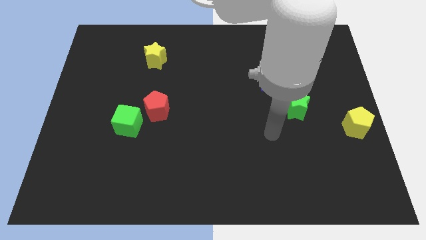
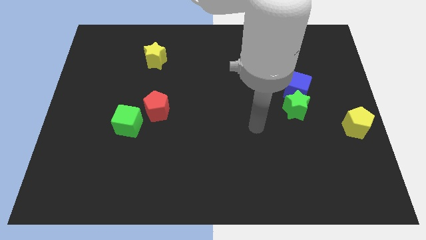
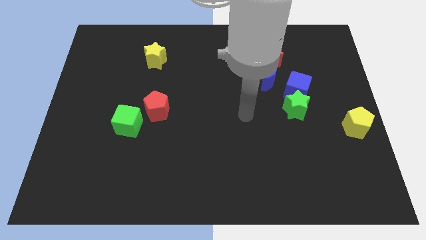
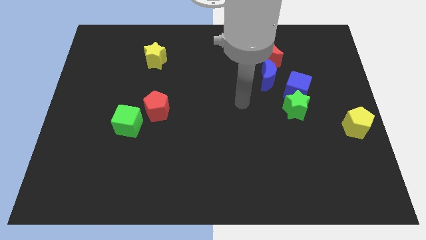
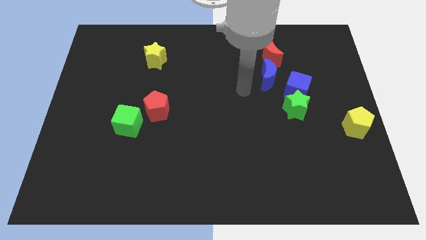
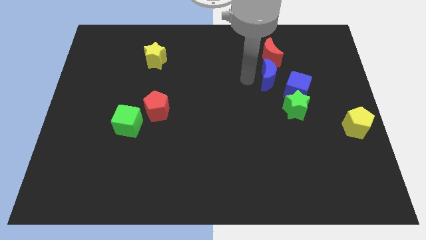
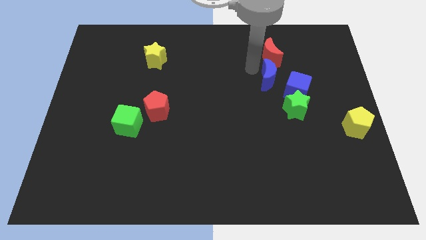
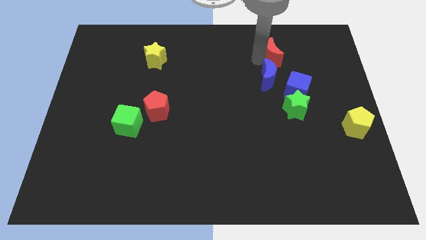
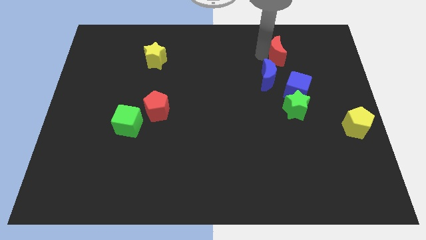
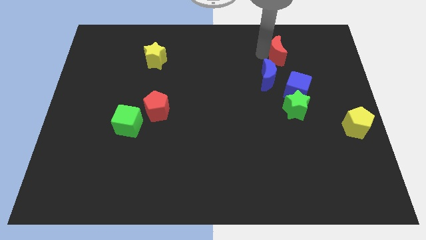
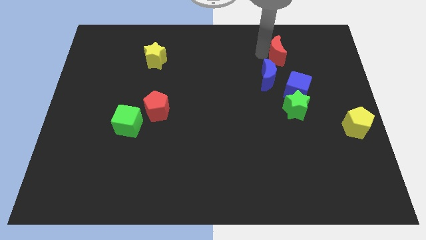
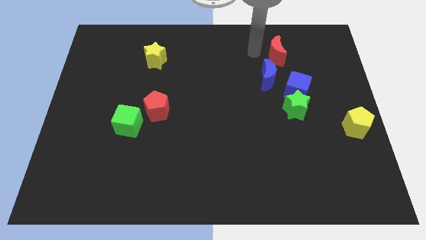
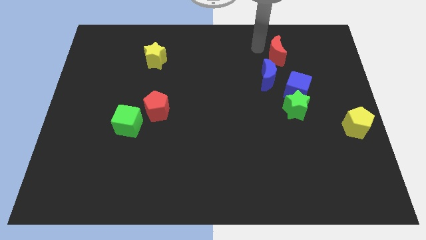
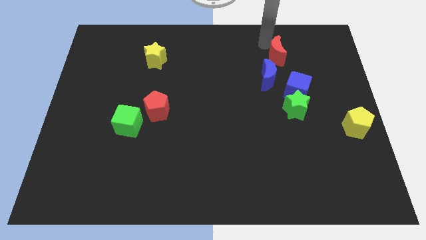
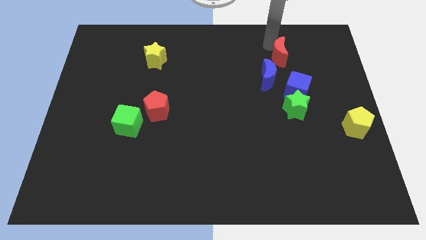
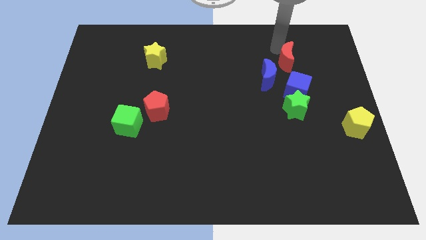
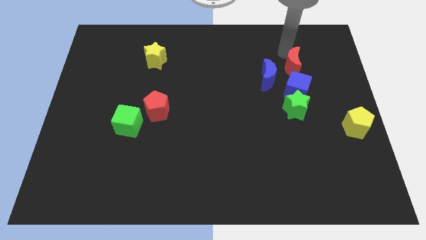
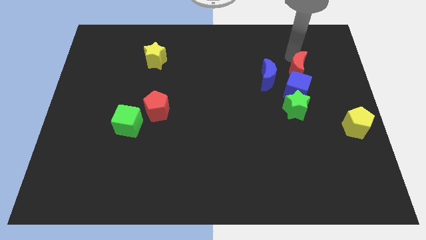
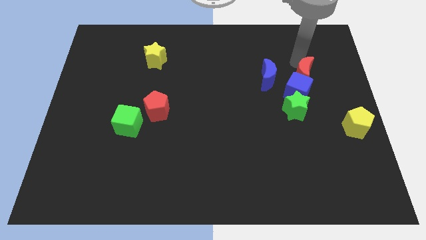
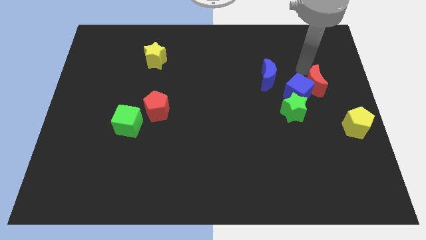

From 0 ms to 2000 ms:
move the red moon above on top of blue cube

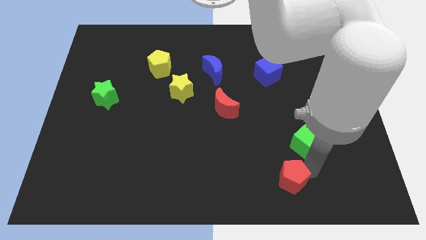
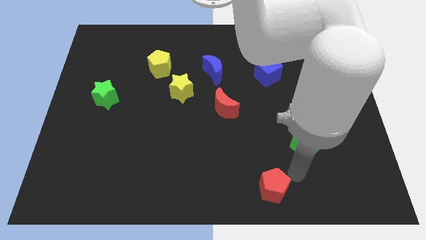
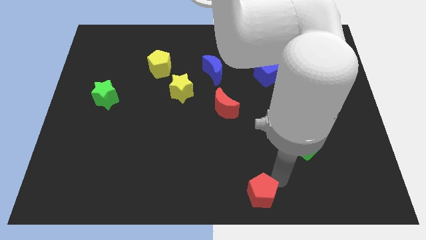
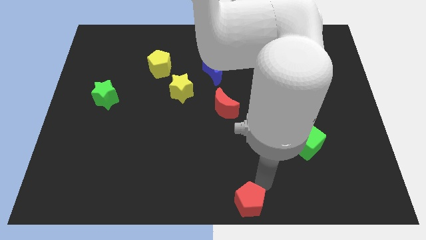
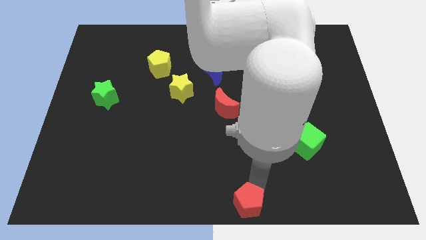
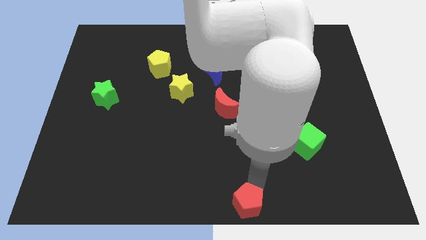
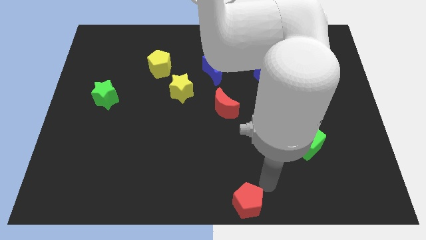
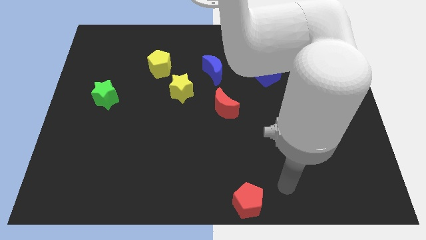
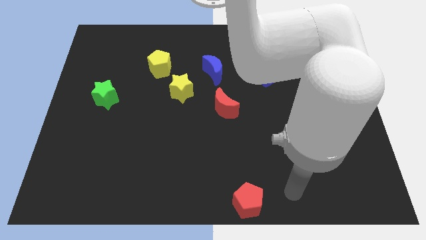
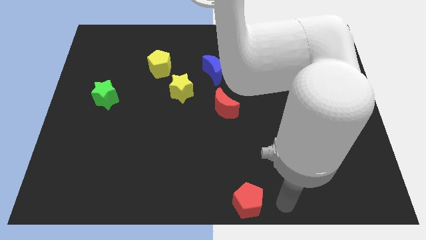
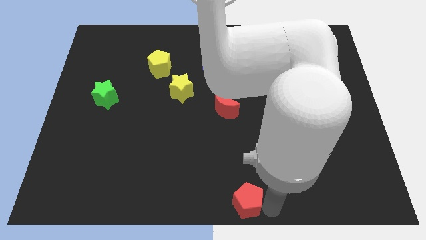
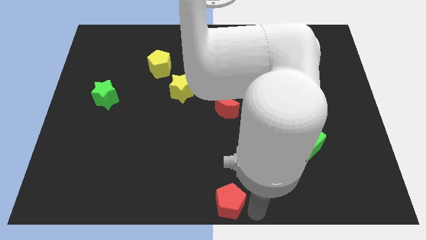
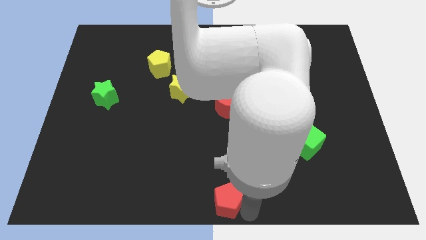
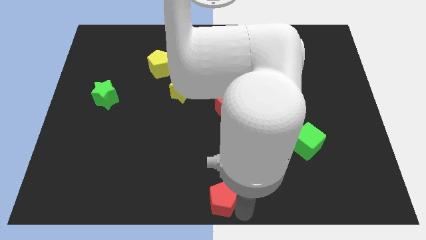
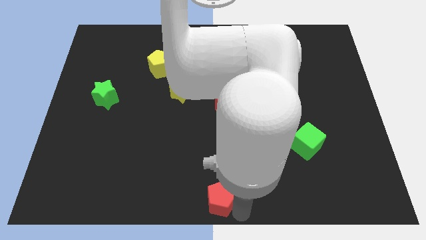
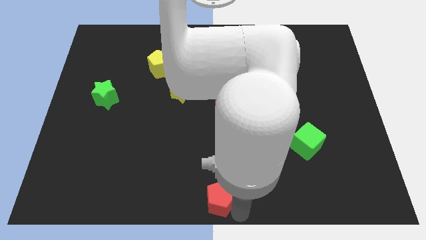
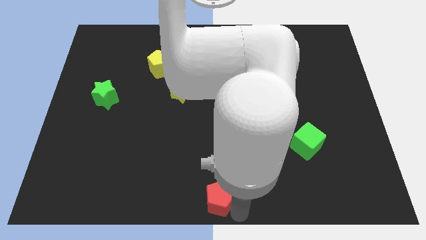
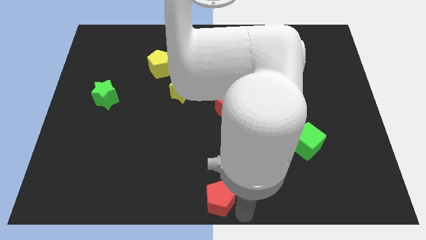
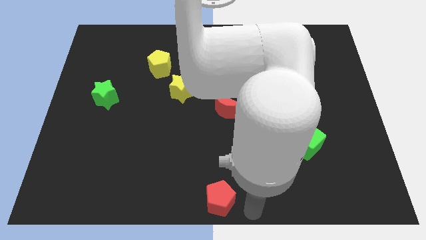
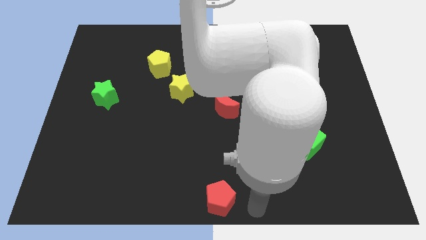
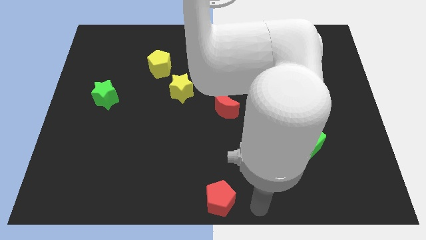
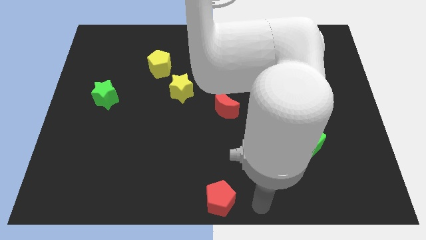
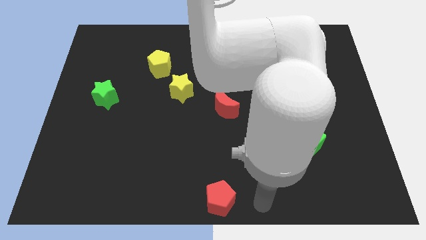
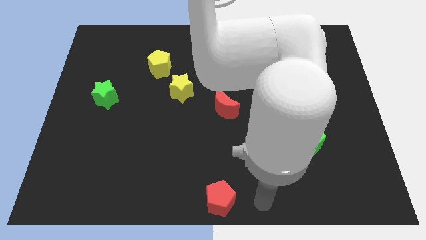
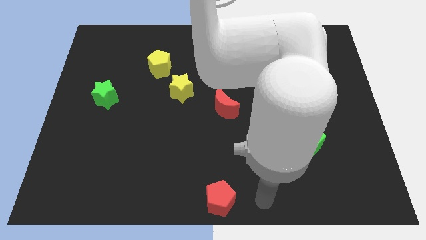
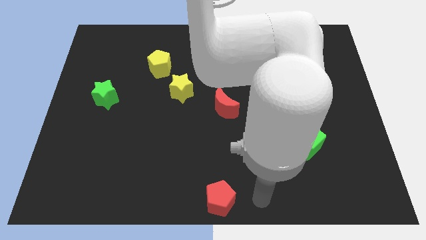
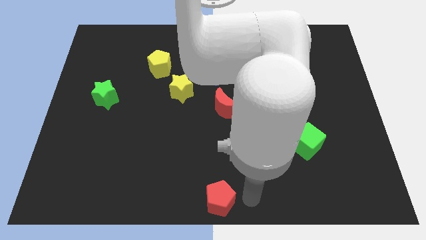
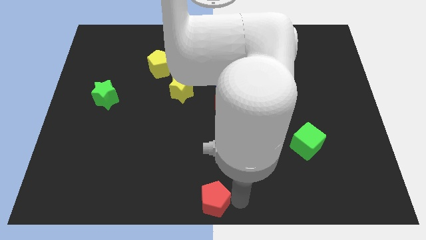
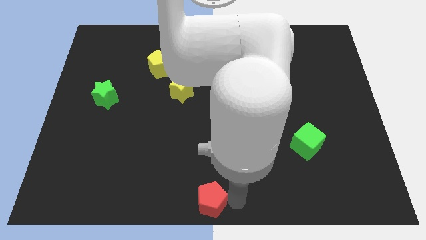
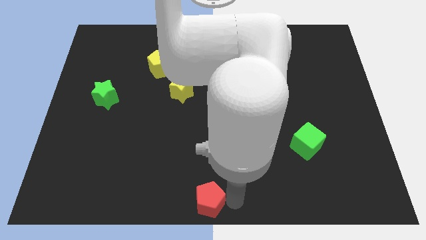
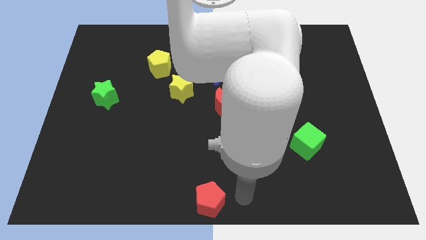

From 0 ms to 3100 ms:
move the red pentagon to the bottom center of the board

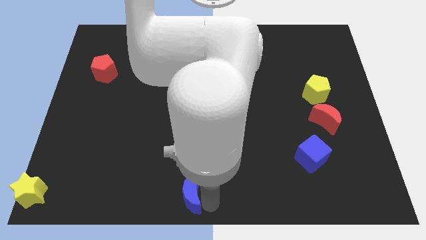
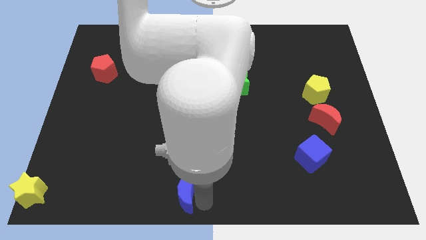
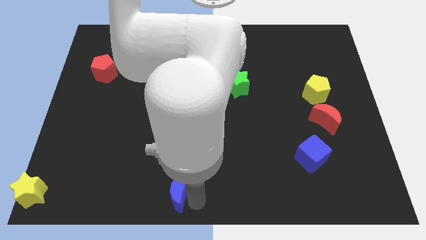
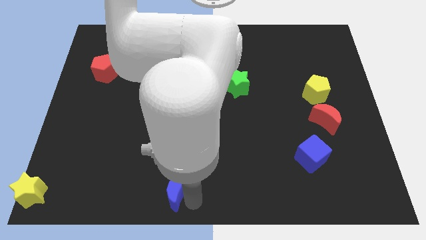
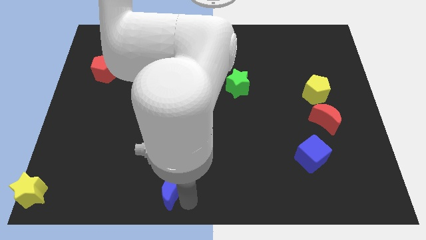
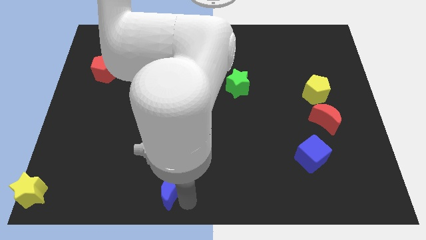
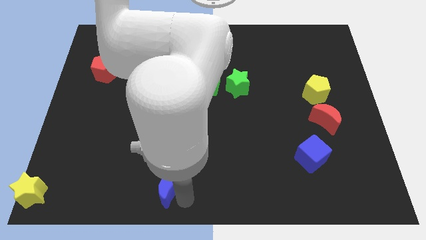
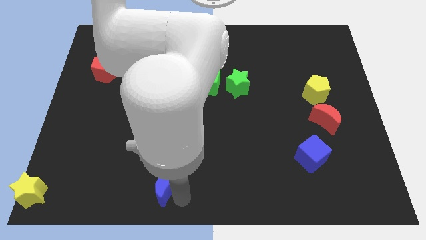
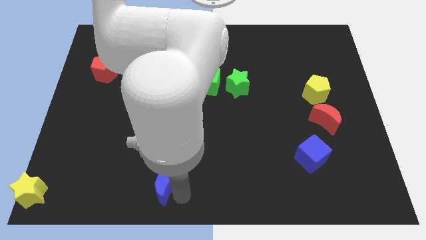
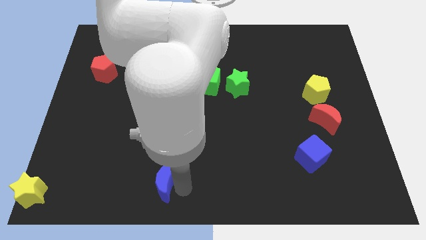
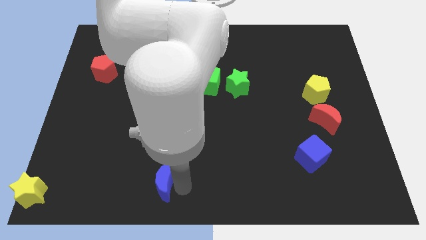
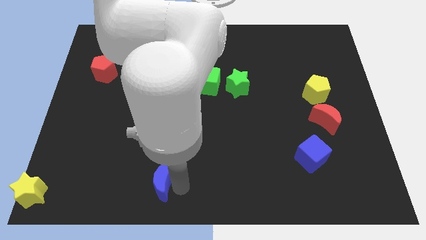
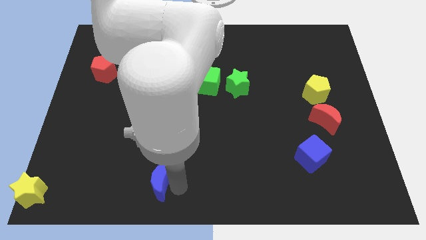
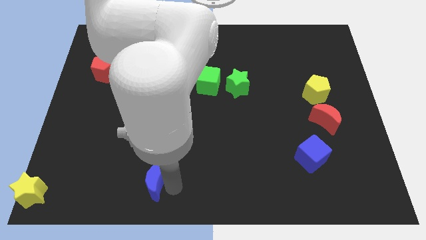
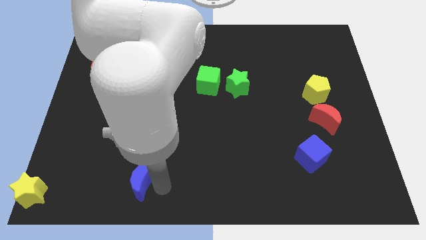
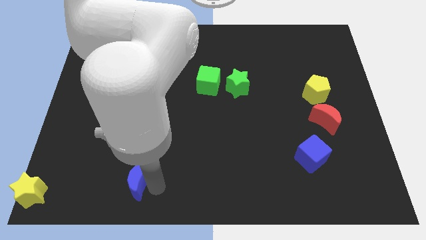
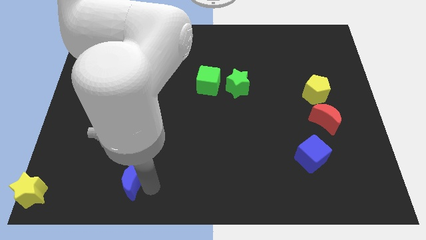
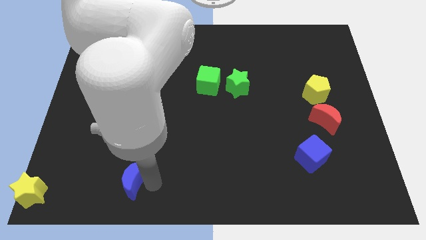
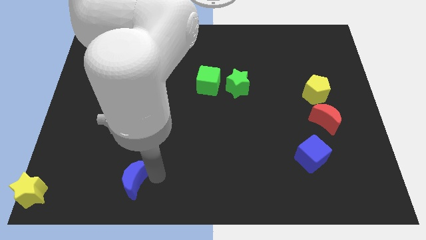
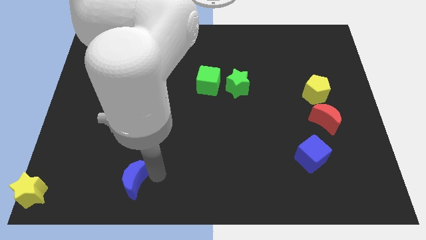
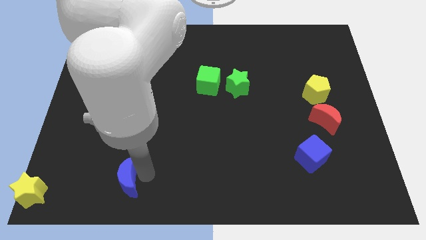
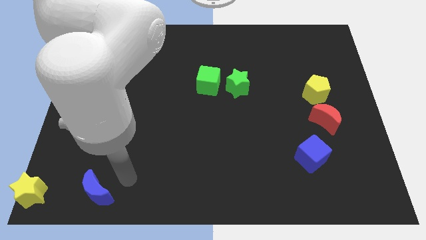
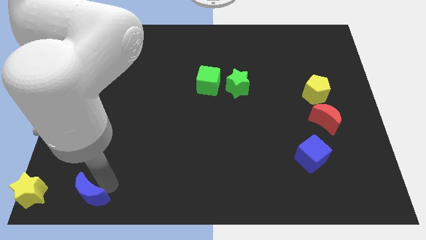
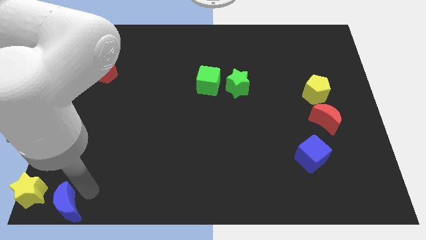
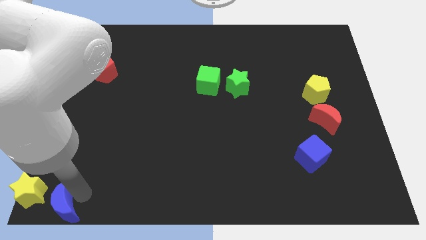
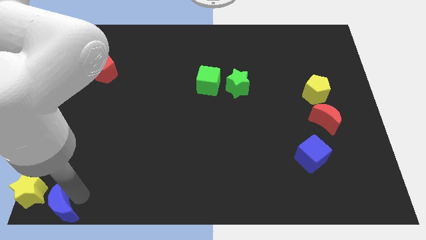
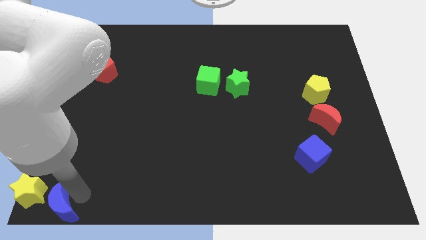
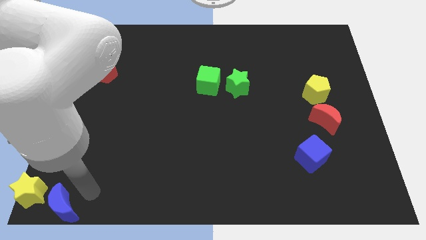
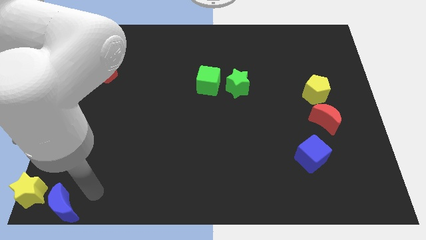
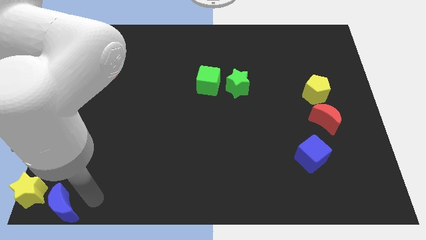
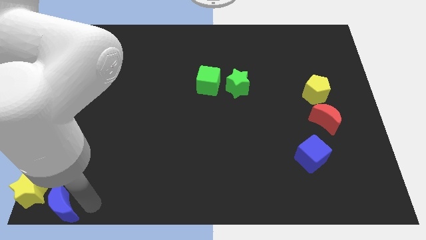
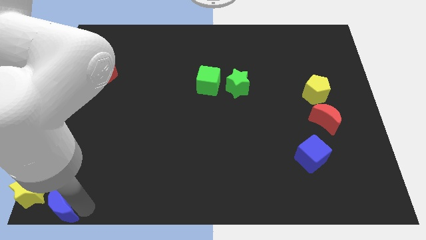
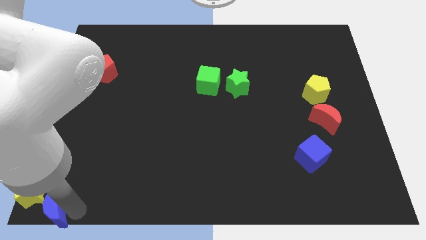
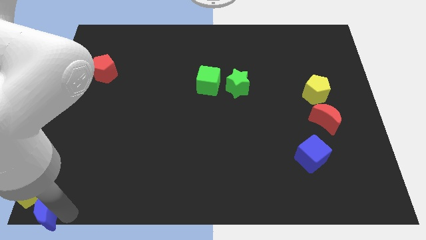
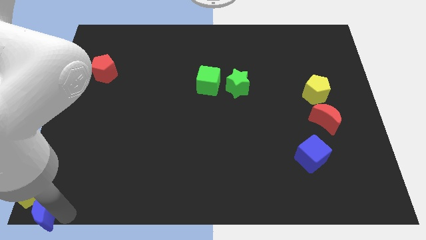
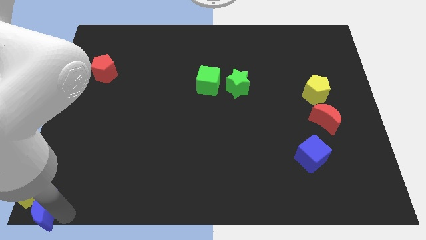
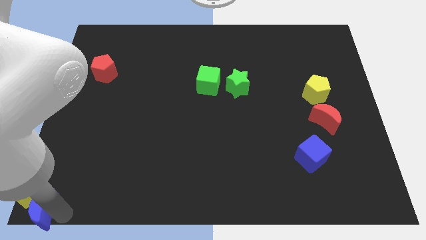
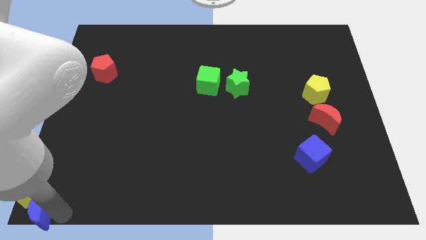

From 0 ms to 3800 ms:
push the blue crescent to the bottom center of the board
